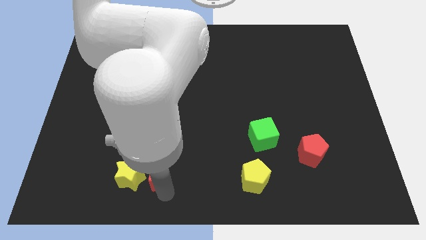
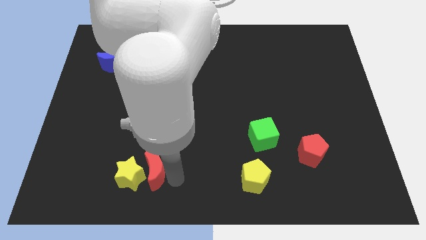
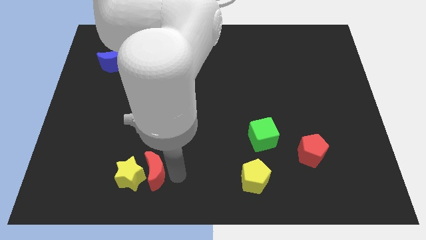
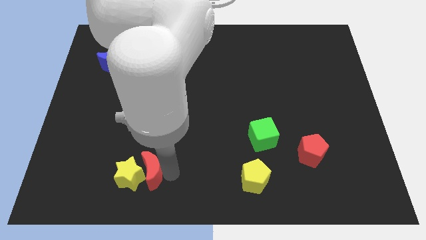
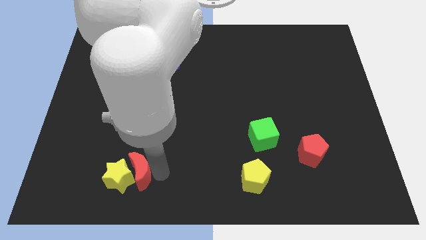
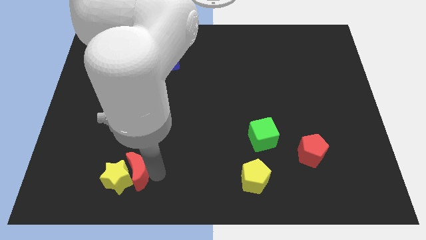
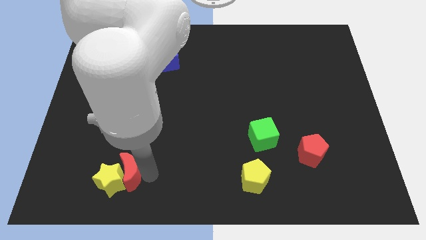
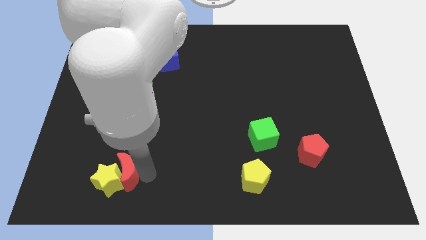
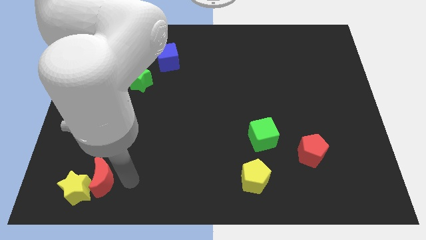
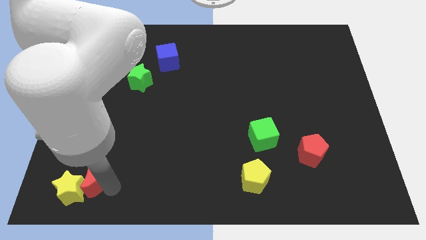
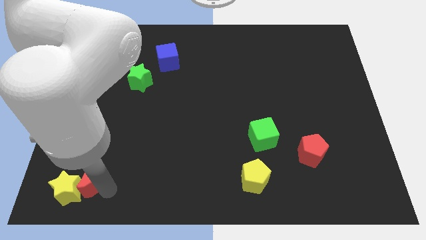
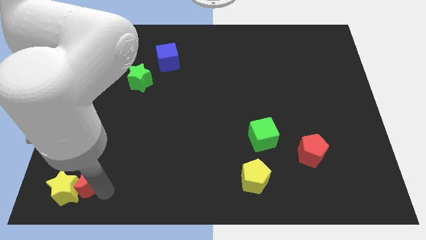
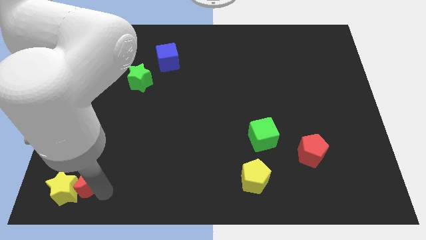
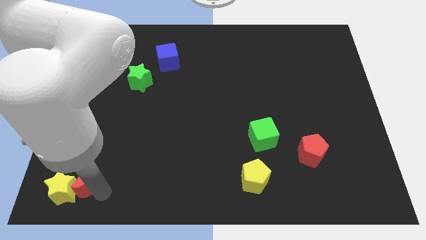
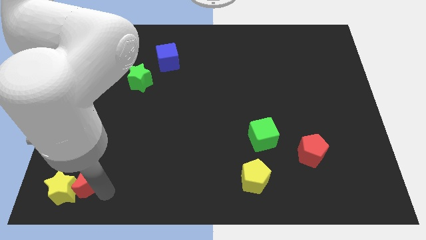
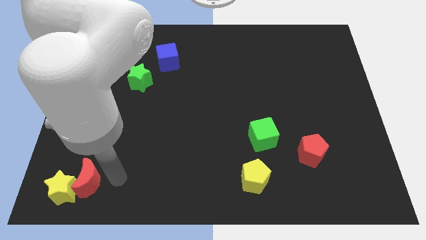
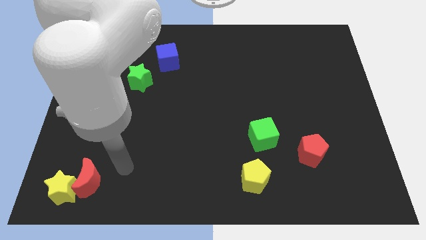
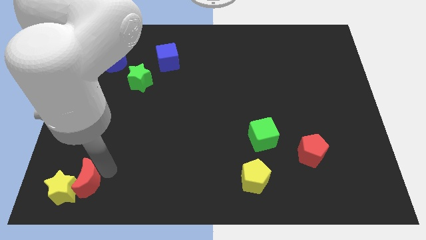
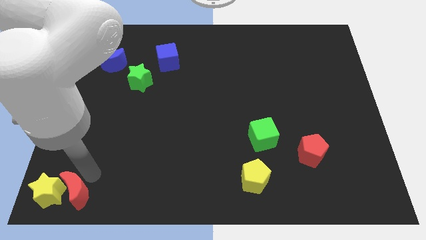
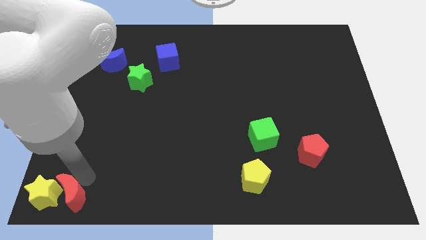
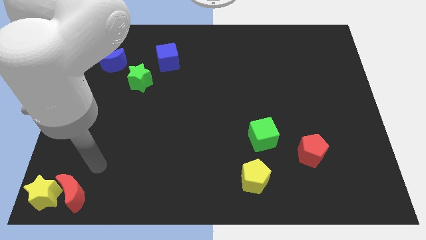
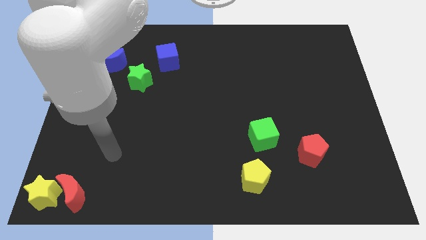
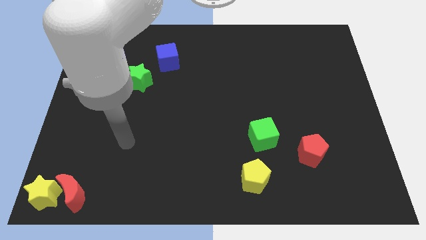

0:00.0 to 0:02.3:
move the red moon and yellow star to the bottom left corner

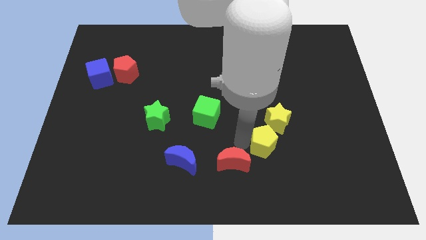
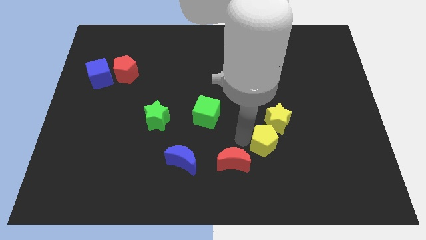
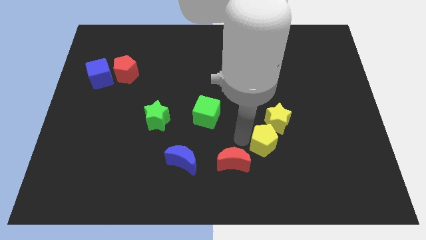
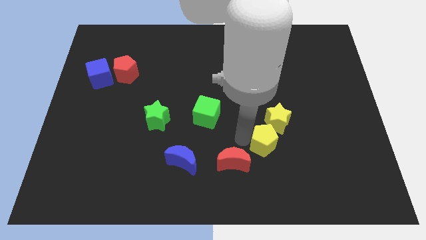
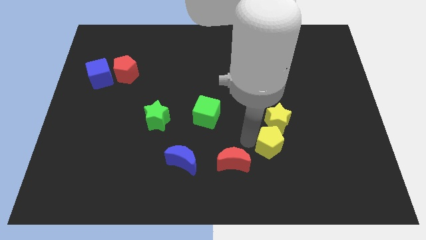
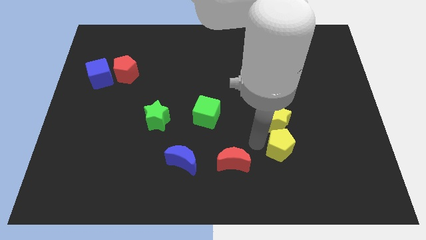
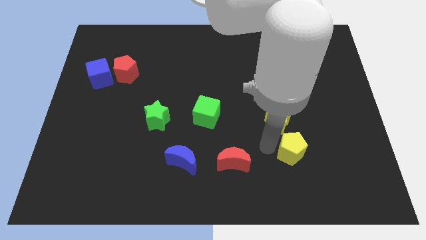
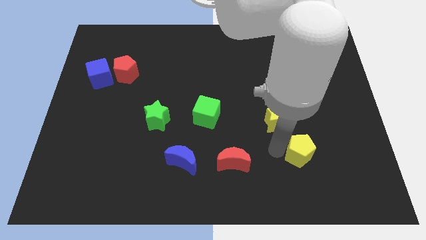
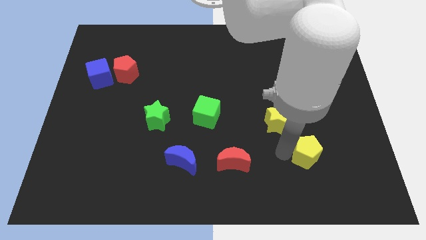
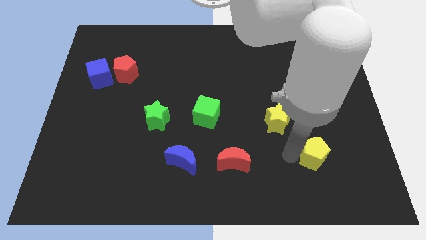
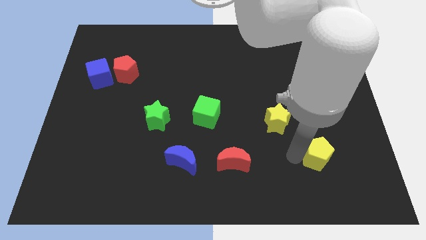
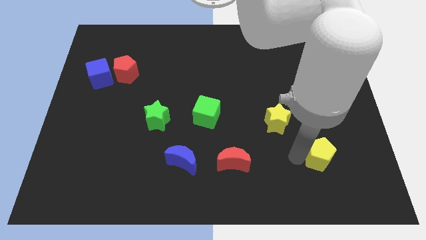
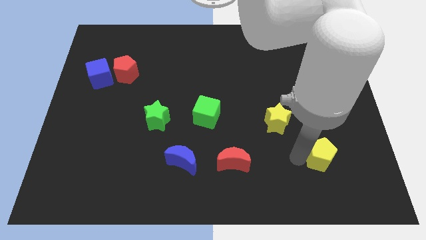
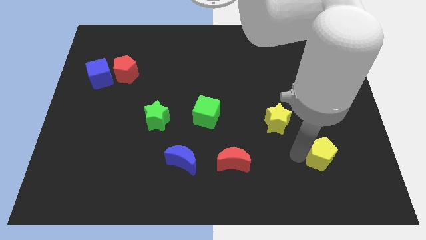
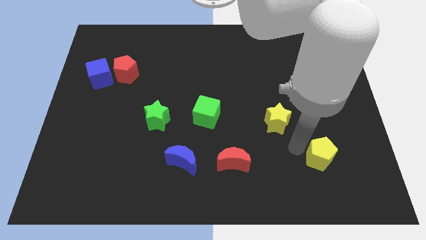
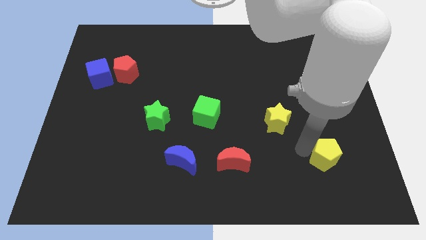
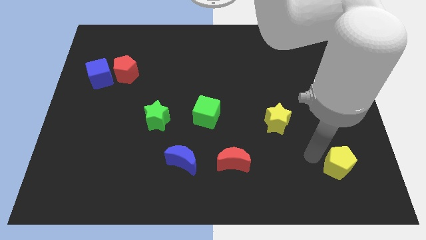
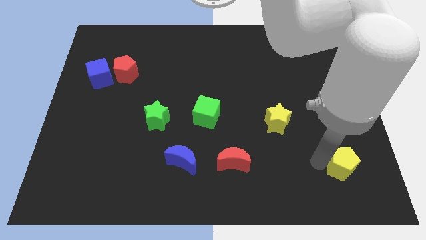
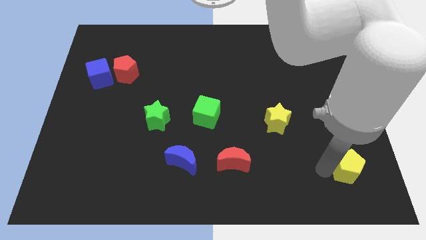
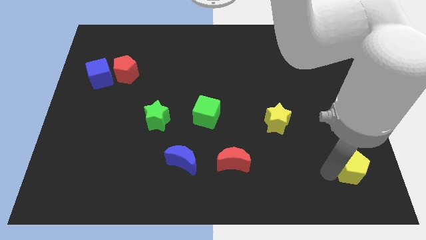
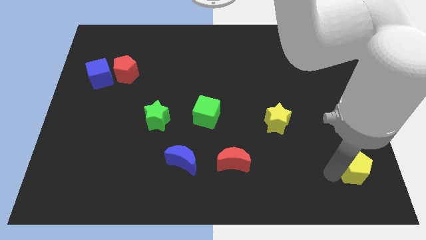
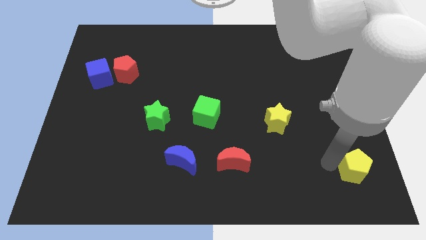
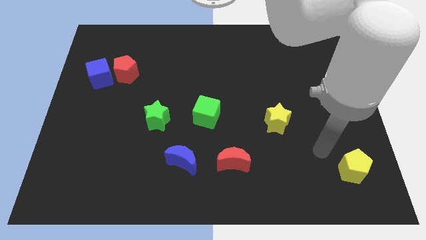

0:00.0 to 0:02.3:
move yellow pentagon to the bottom right

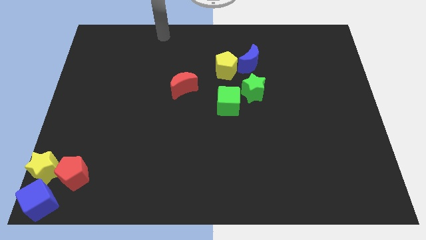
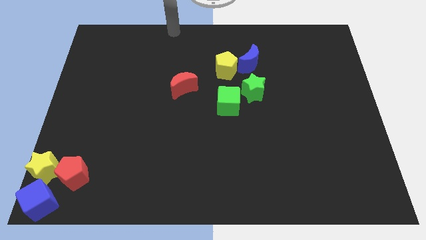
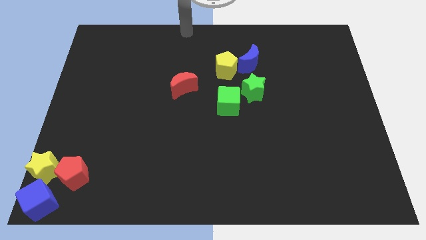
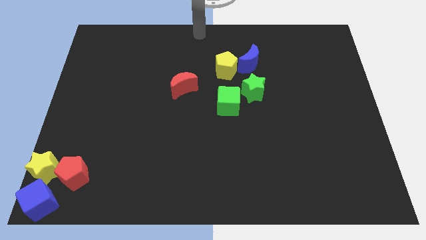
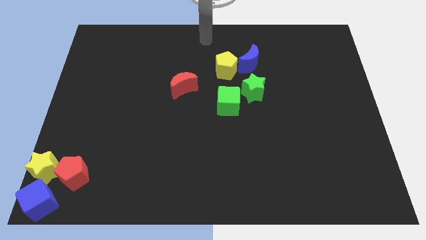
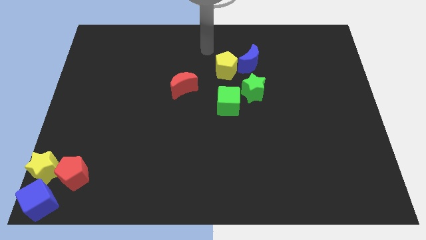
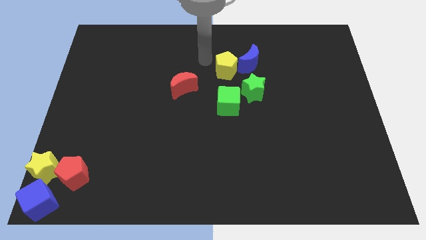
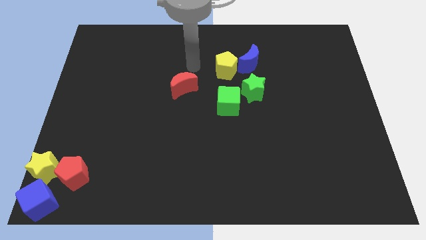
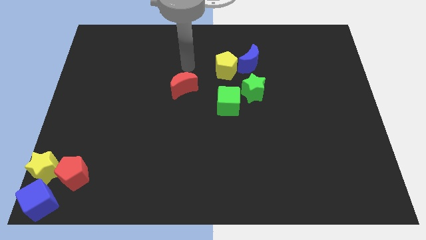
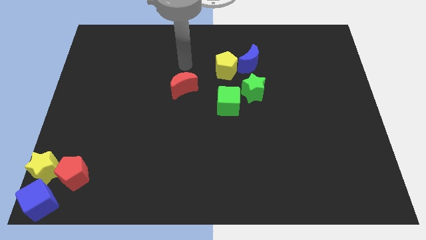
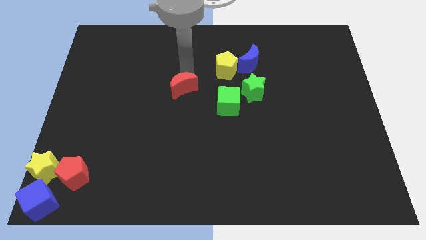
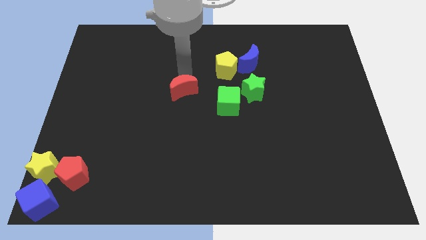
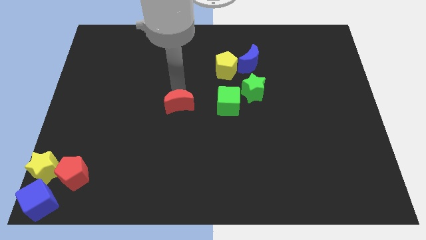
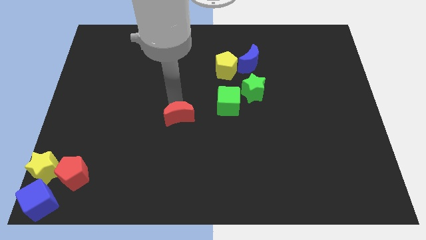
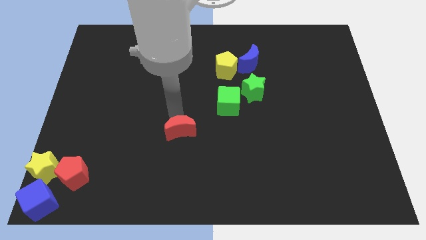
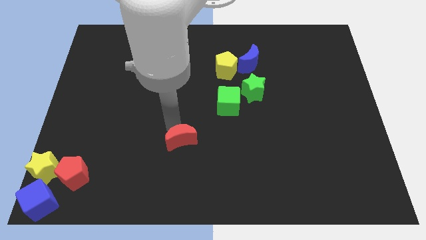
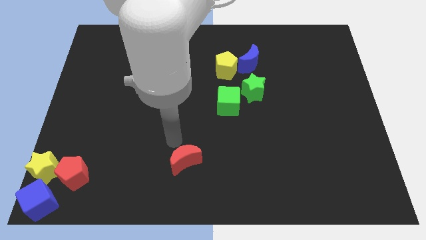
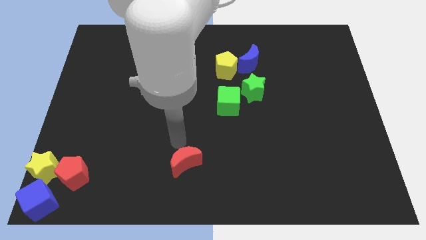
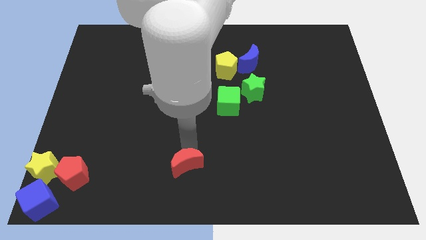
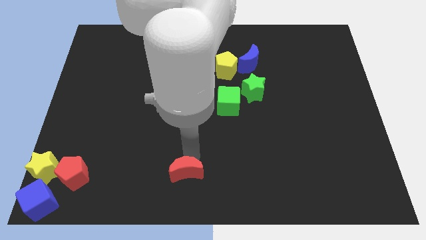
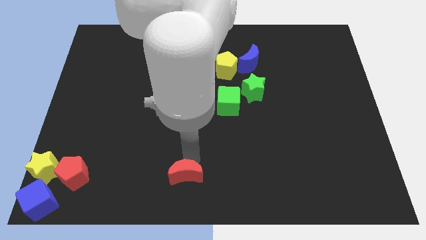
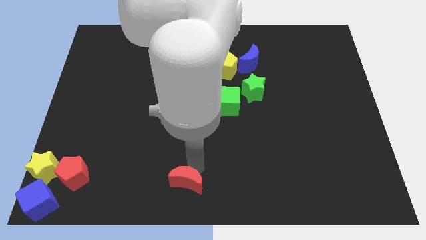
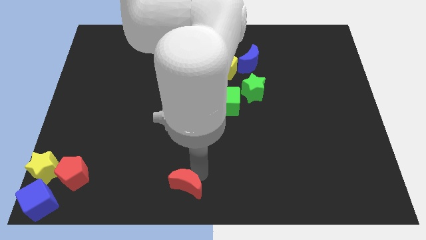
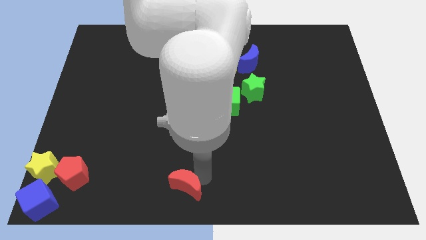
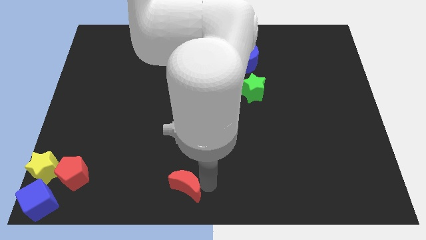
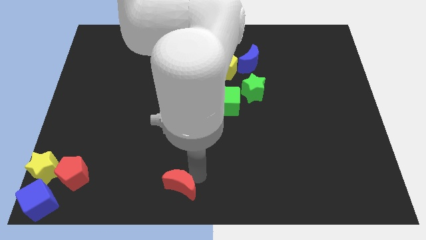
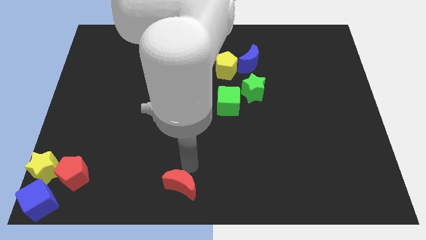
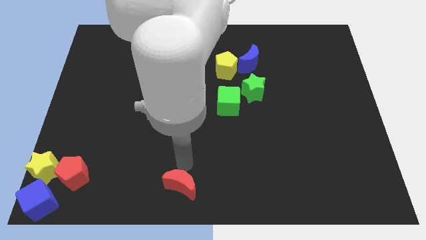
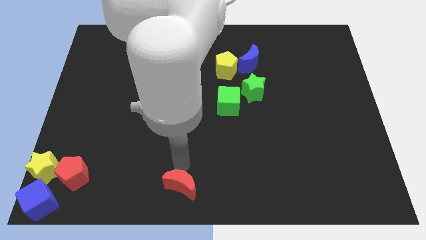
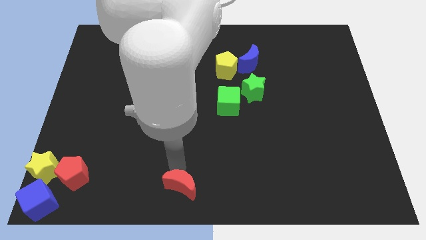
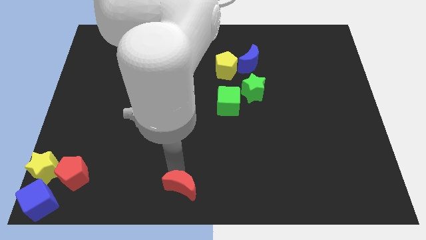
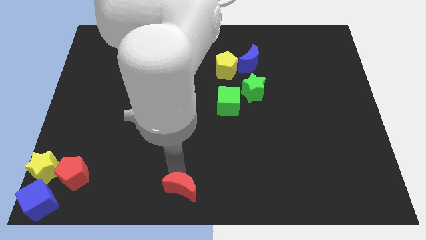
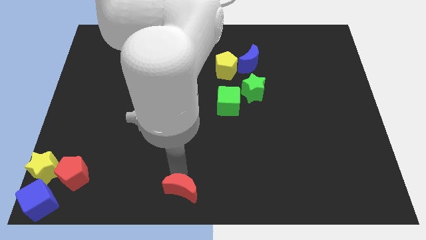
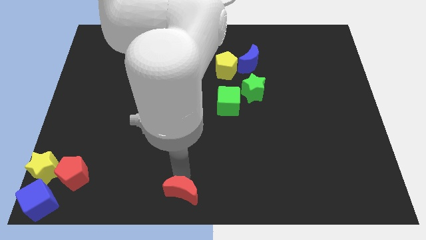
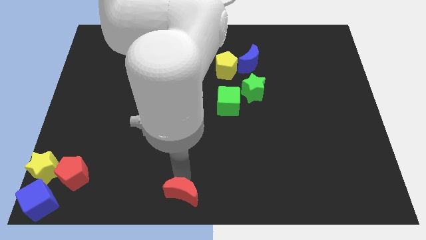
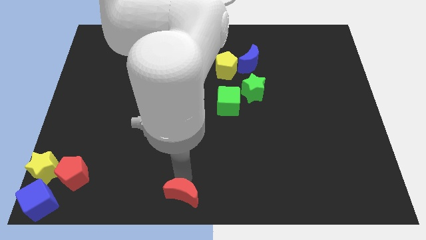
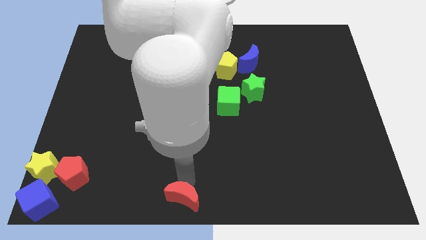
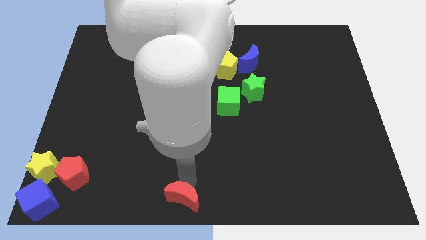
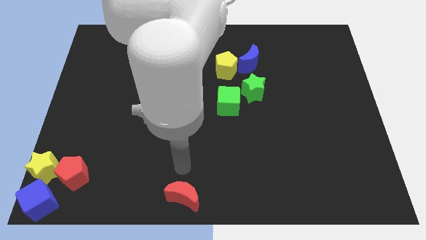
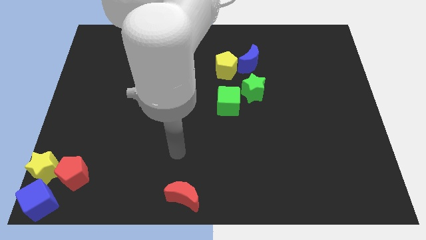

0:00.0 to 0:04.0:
move the red moon to the bottom center

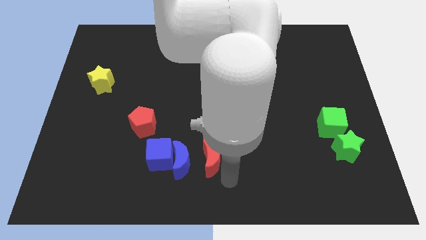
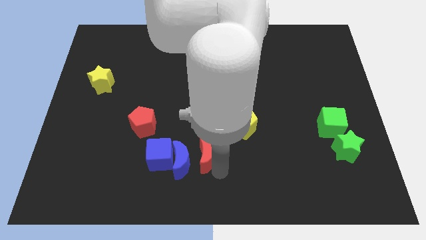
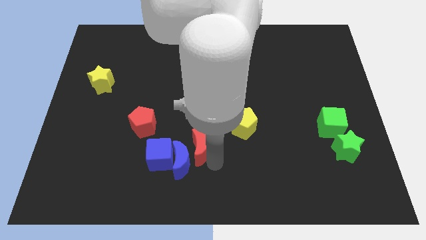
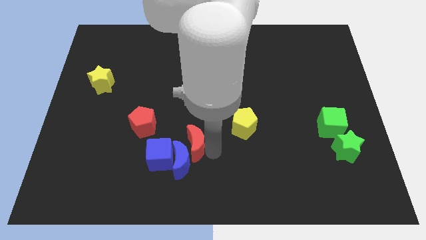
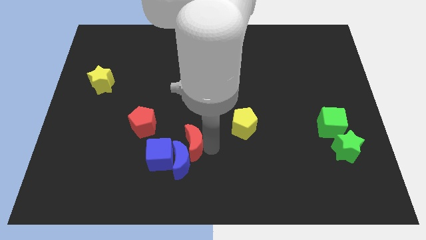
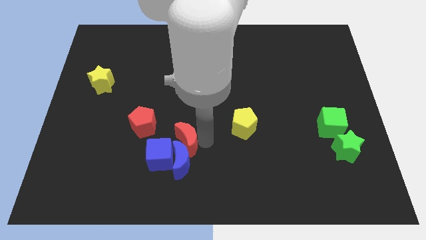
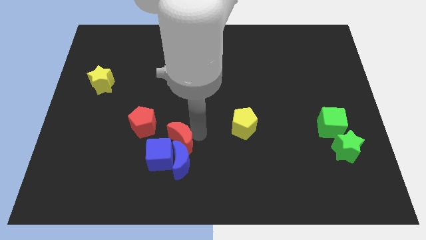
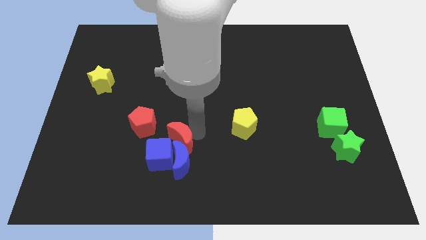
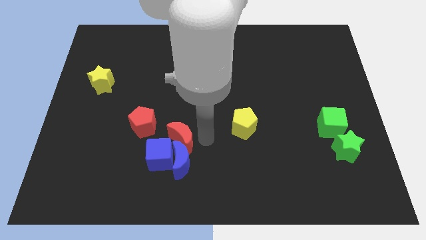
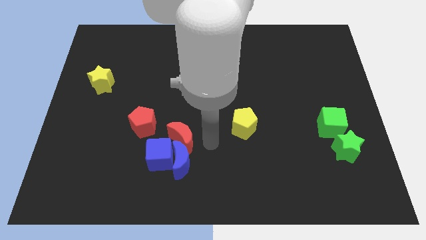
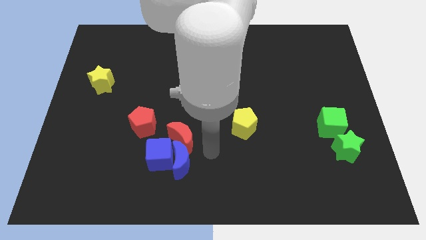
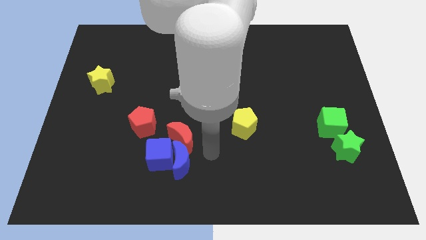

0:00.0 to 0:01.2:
move red crescent into blue crescent
